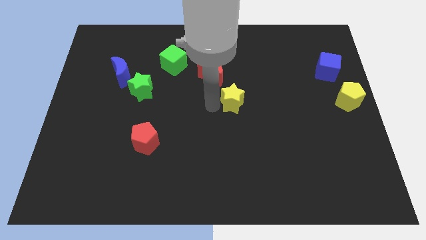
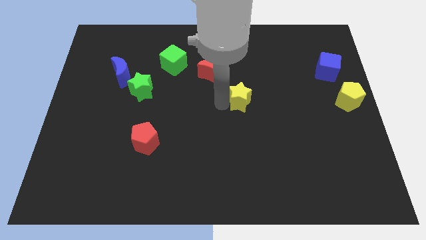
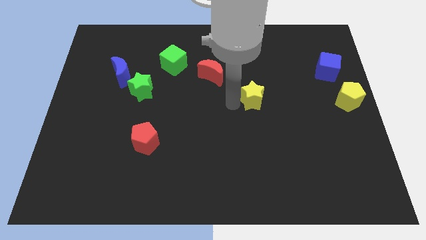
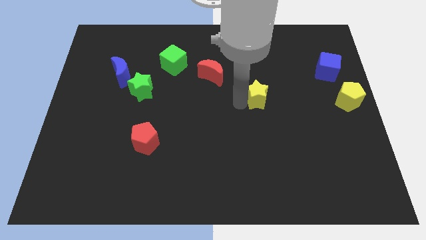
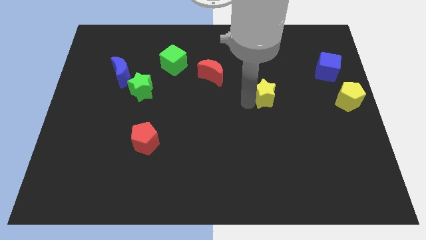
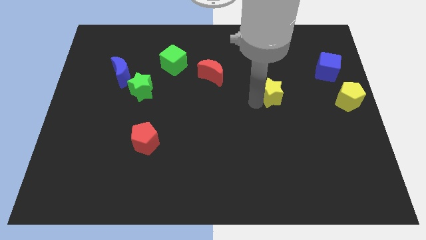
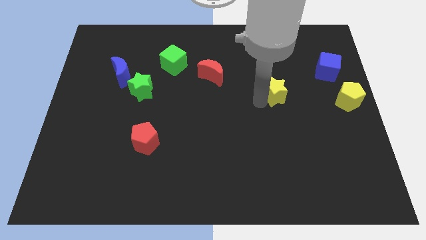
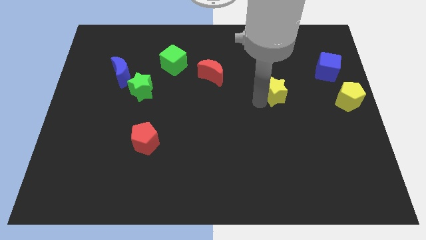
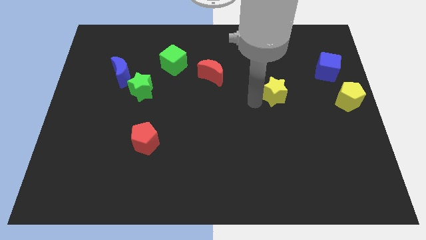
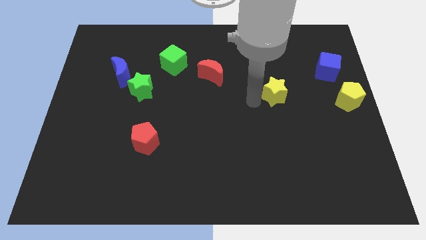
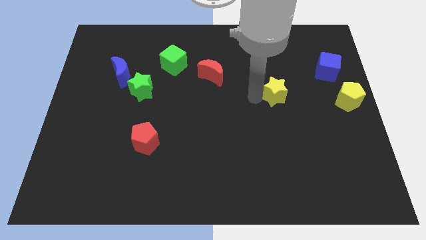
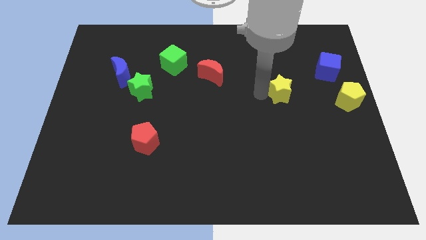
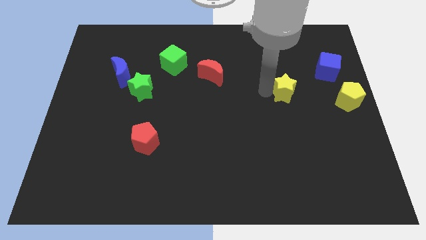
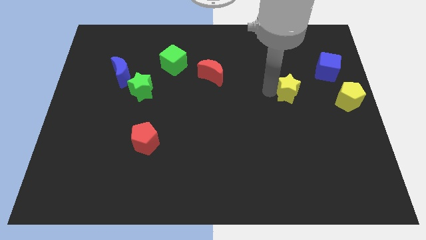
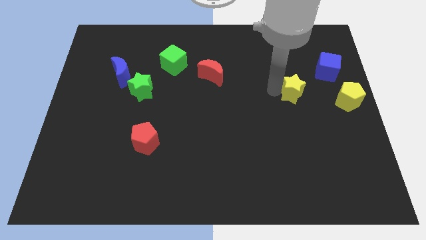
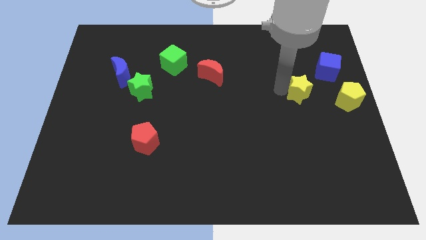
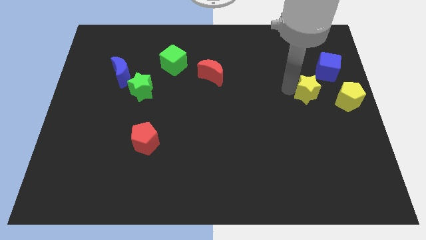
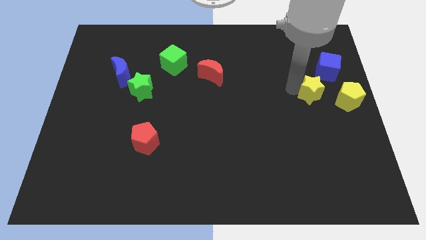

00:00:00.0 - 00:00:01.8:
move the yellow star towards the left of yellow pentagon

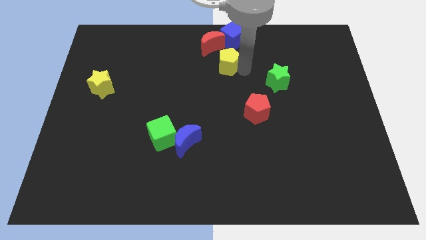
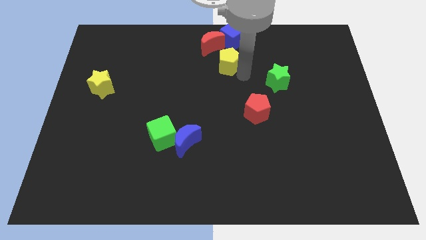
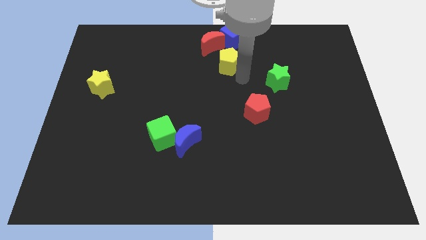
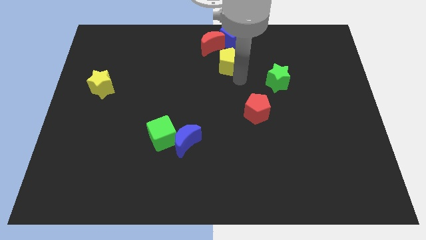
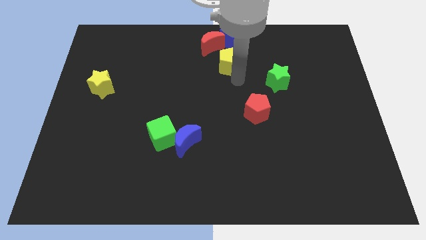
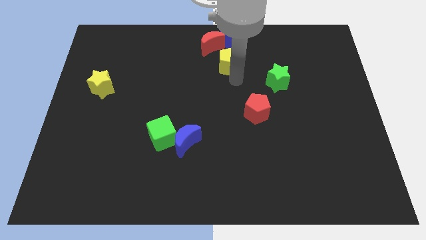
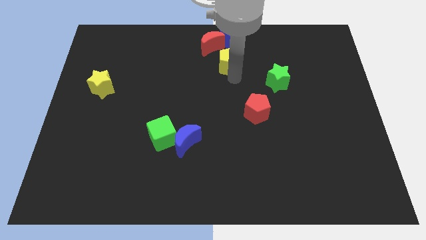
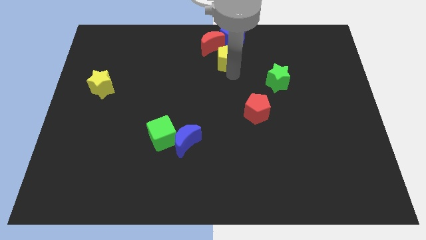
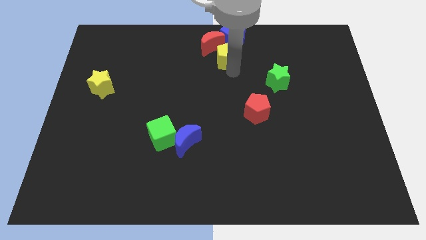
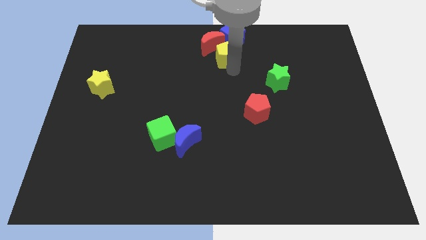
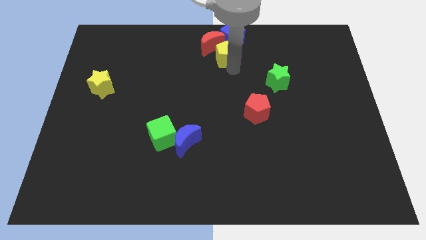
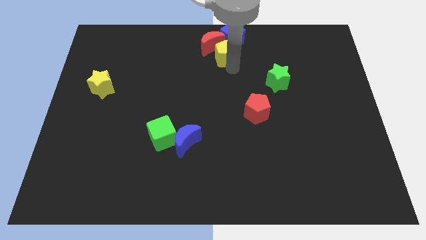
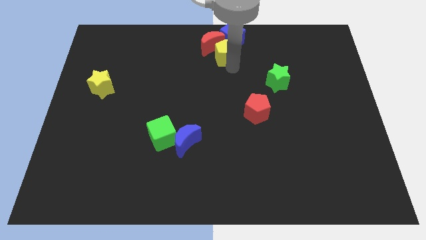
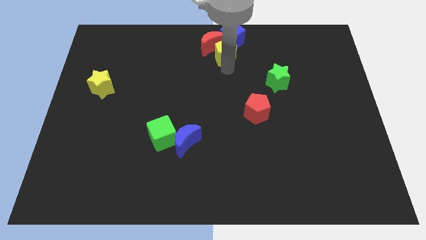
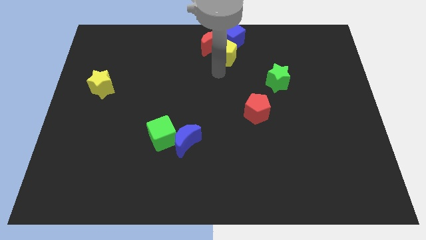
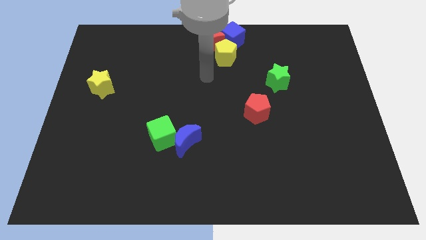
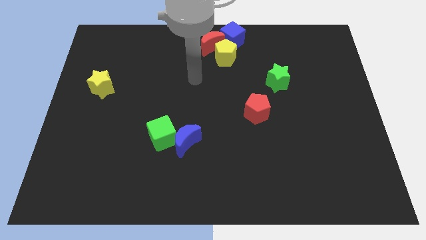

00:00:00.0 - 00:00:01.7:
move the yellow pentagon to the bottom right side of the red crescent

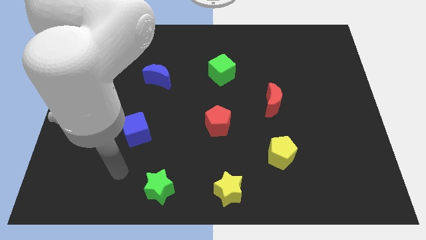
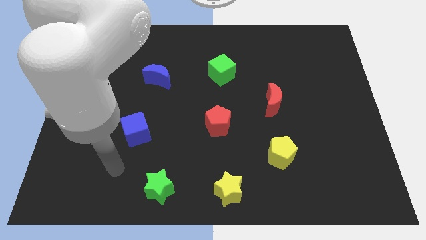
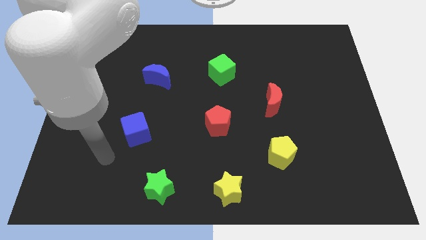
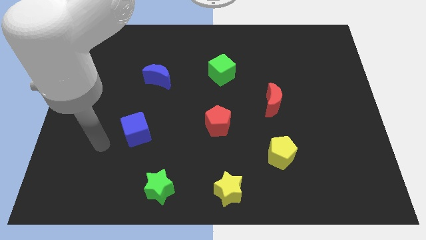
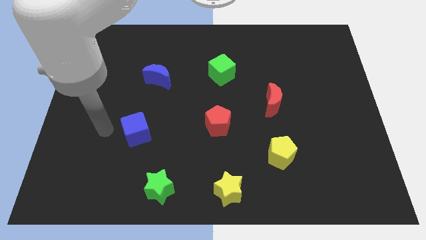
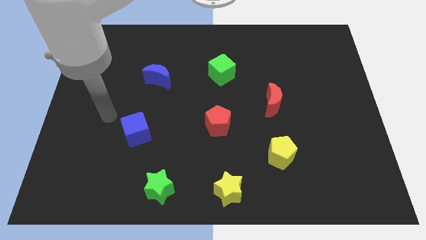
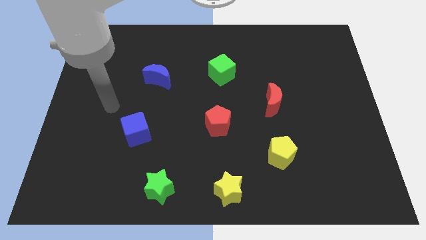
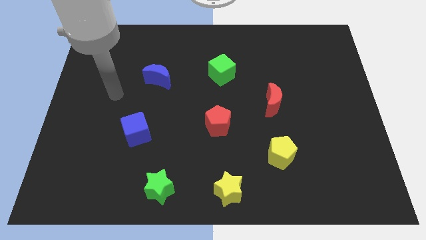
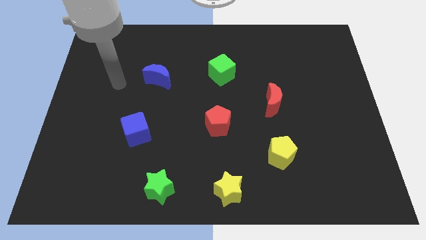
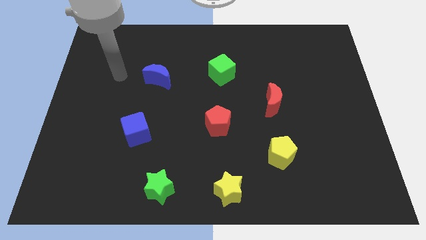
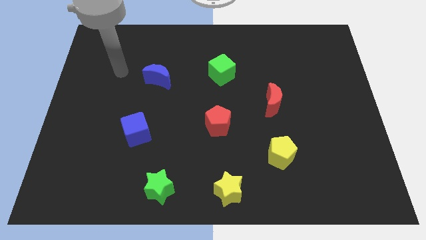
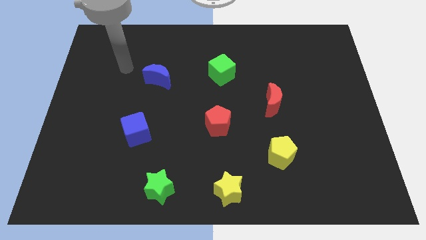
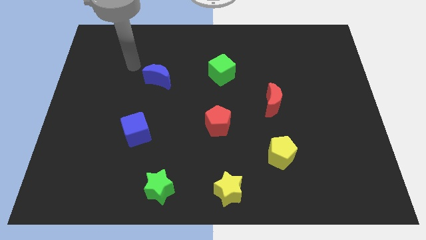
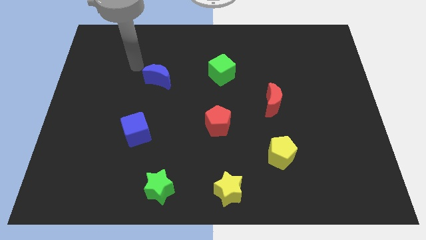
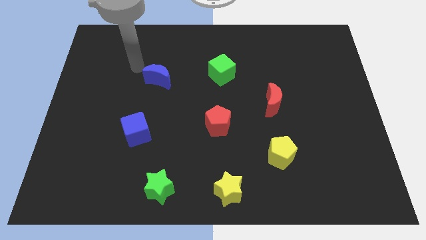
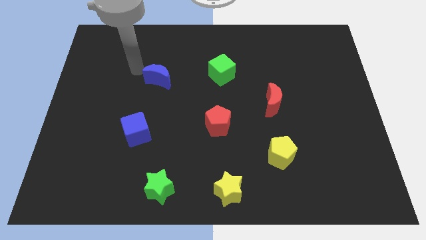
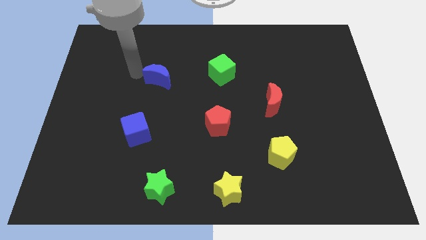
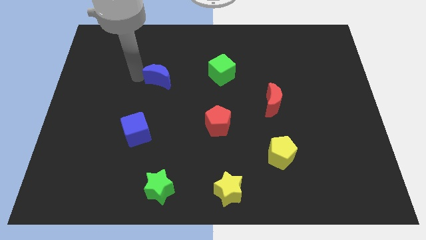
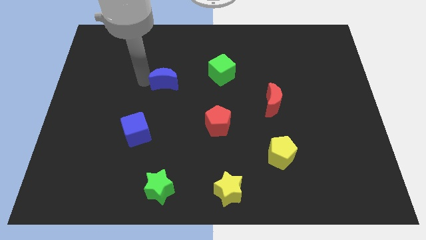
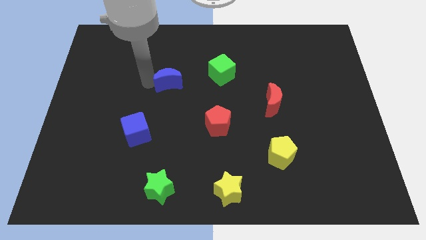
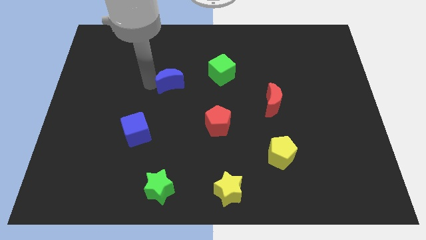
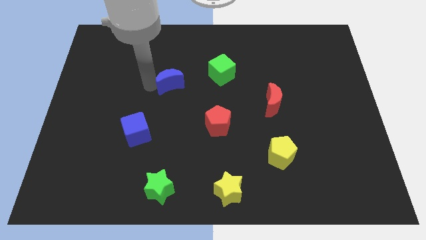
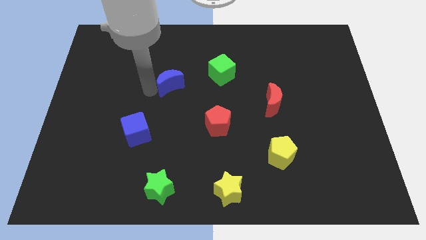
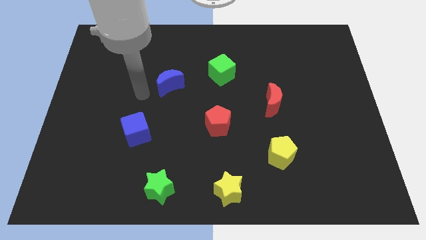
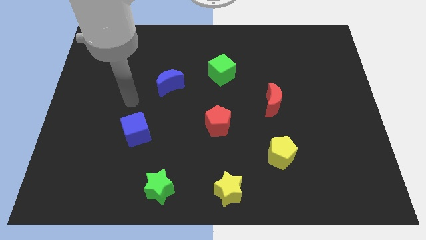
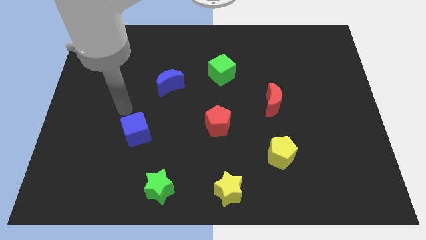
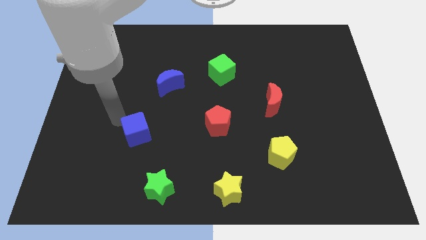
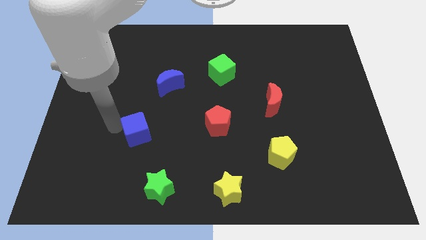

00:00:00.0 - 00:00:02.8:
slightly move the blue crescent towards the center left of the board

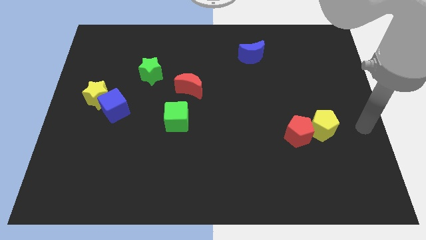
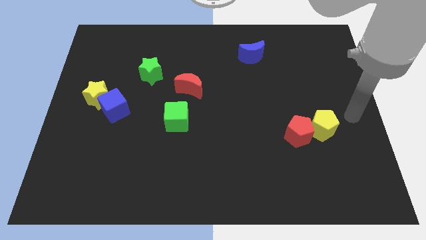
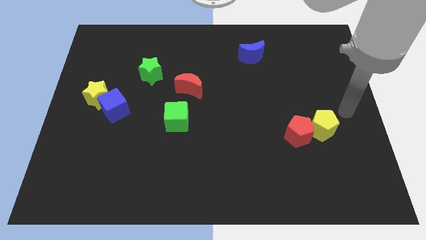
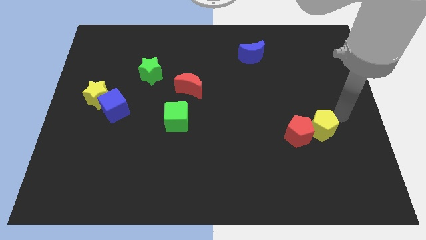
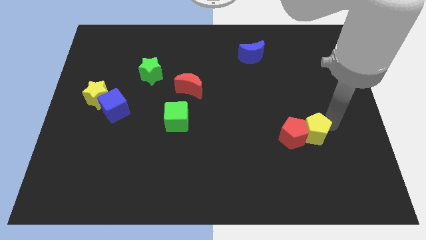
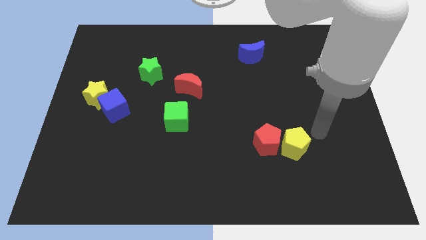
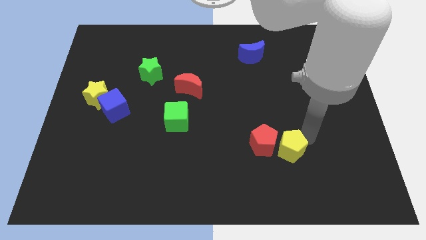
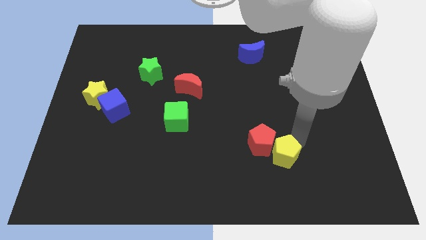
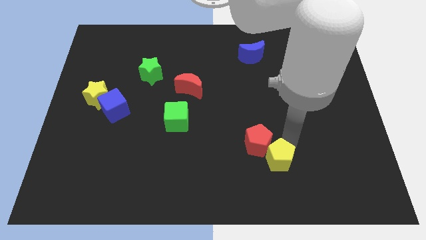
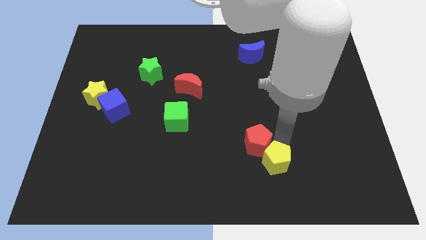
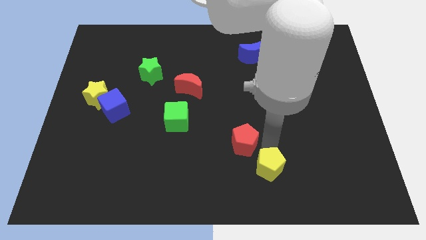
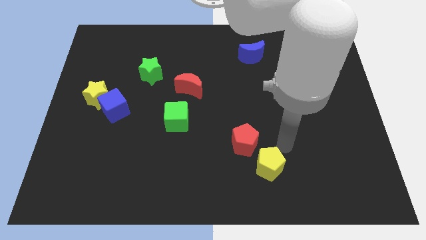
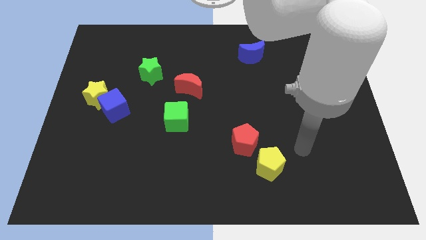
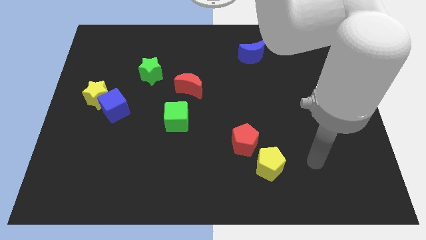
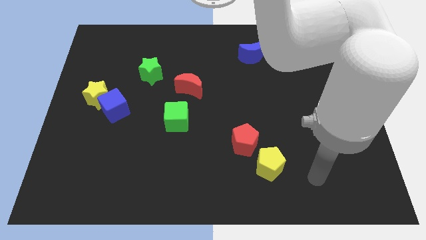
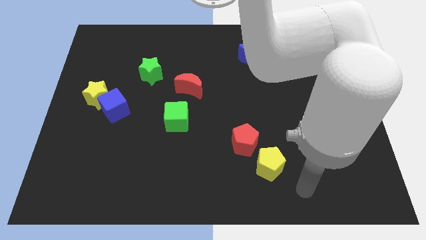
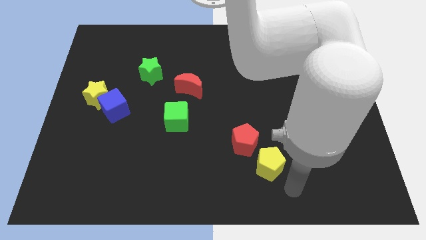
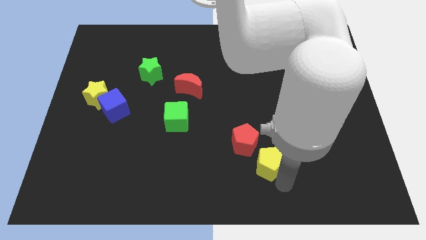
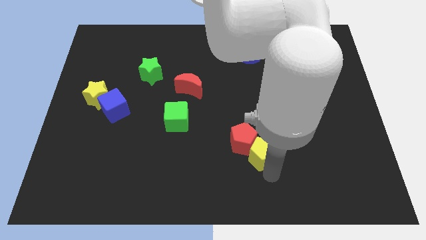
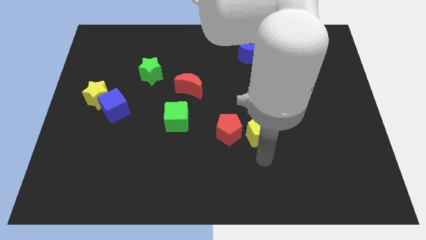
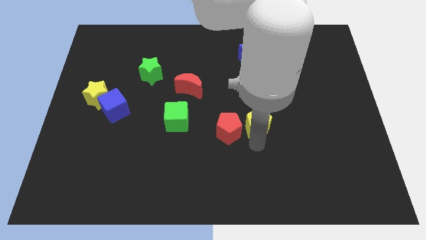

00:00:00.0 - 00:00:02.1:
push the yellow and red pentagons towards the green cube

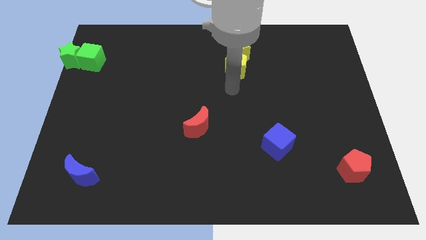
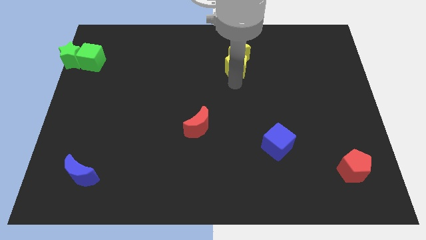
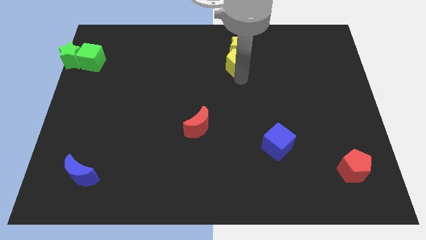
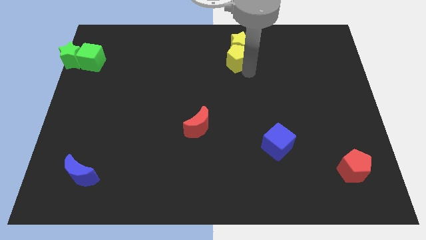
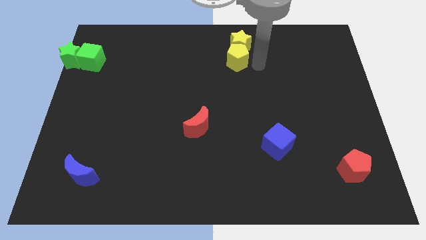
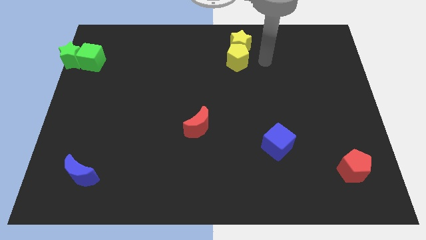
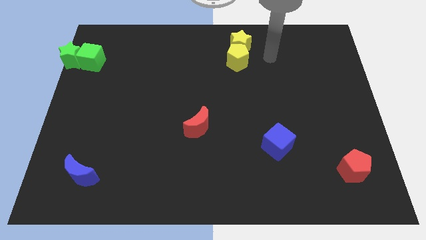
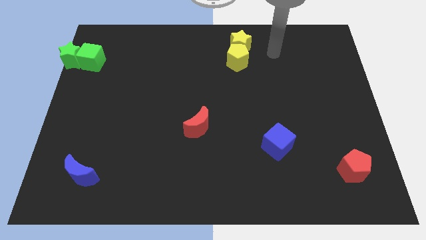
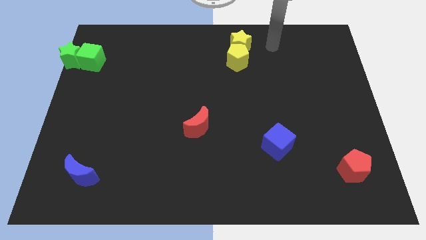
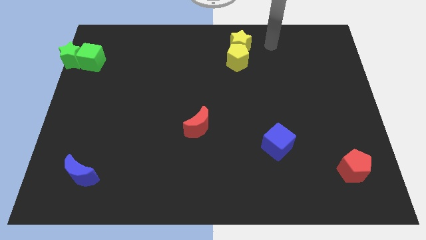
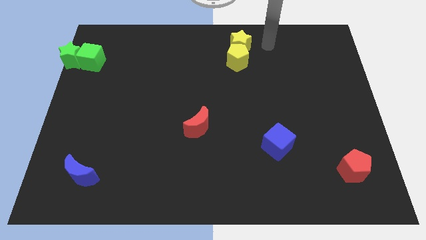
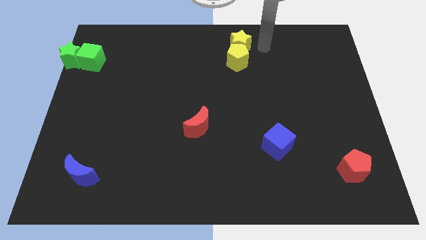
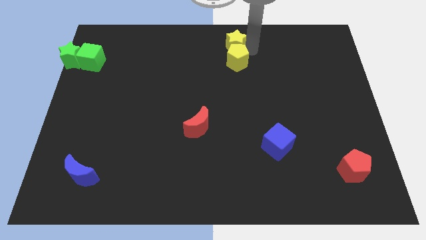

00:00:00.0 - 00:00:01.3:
move the yellow star to the top side of the yellow pentagon
